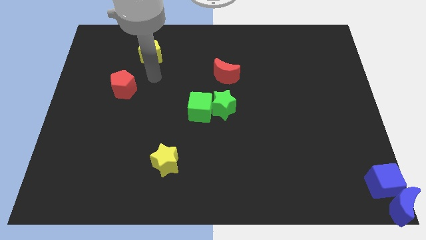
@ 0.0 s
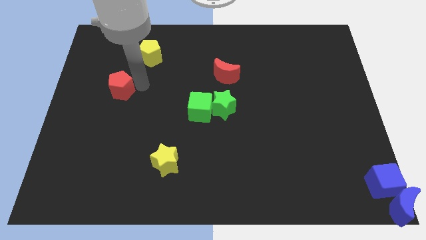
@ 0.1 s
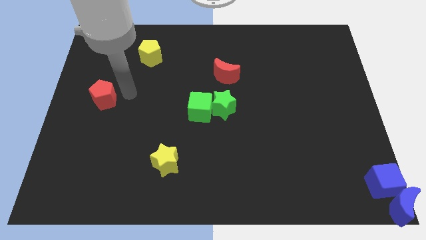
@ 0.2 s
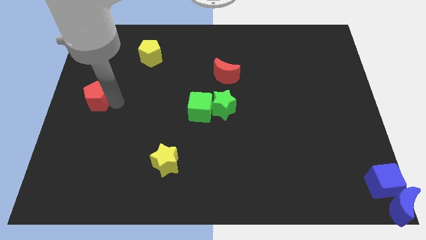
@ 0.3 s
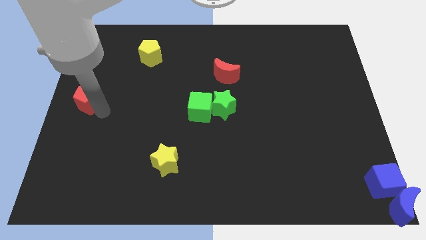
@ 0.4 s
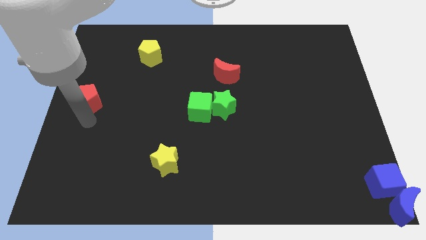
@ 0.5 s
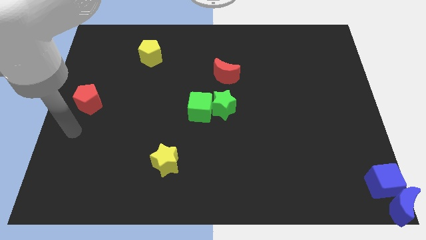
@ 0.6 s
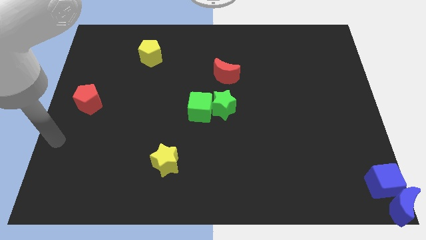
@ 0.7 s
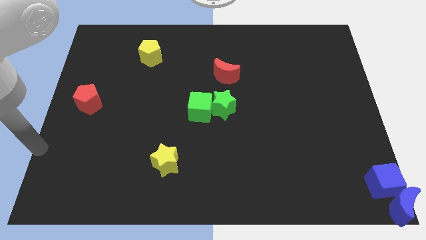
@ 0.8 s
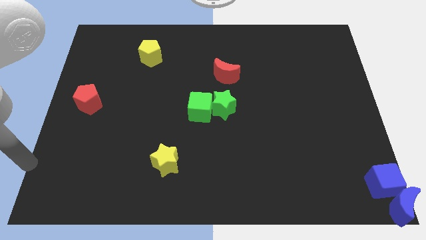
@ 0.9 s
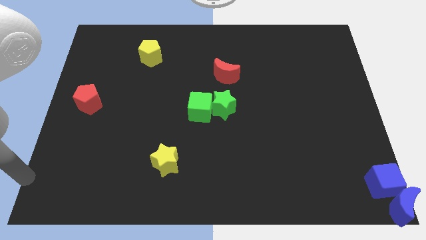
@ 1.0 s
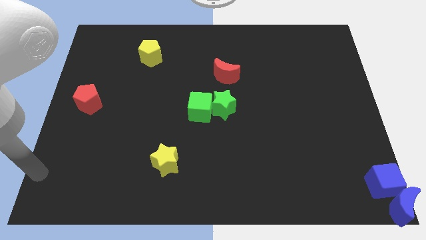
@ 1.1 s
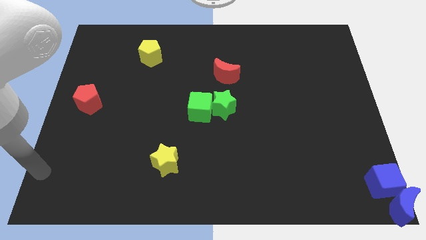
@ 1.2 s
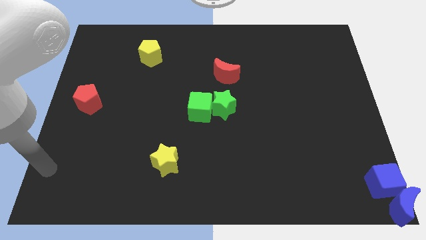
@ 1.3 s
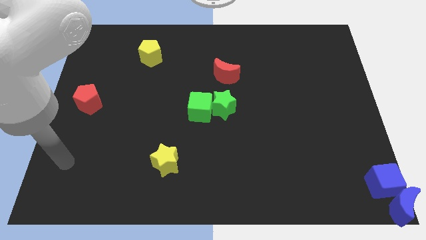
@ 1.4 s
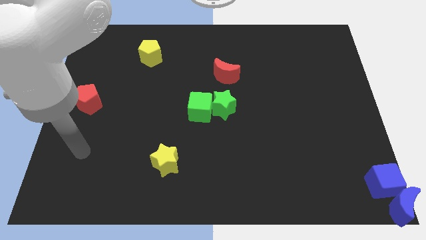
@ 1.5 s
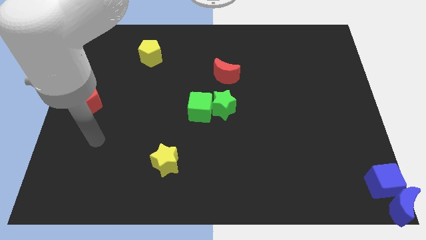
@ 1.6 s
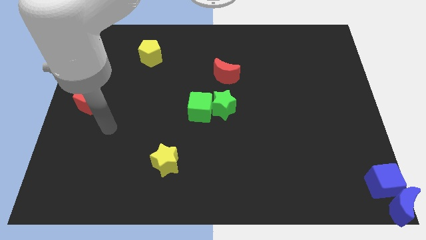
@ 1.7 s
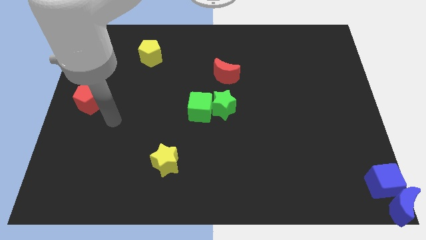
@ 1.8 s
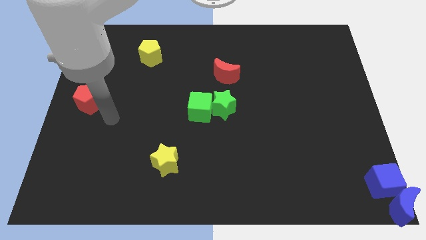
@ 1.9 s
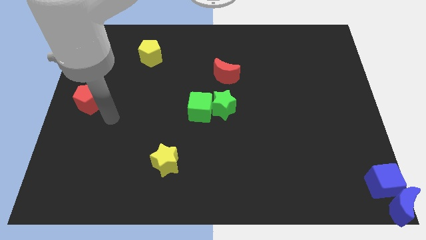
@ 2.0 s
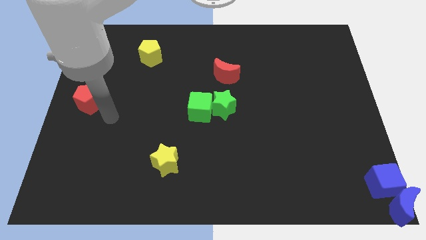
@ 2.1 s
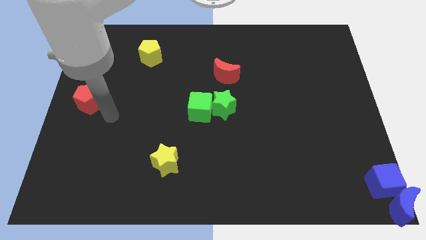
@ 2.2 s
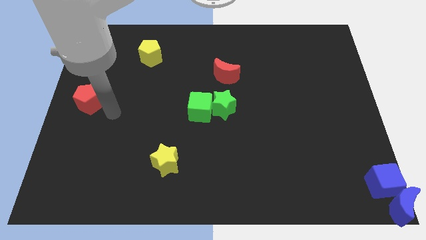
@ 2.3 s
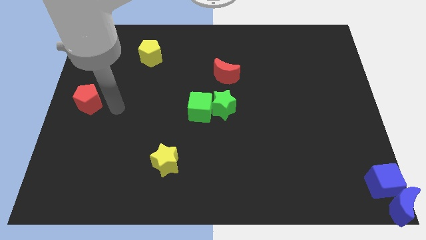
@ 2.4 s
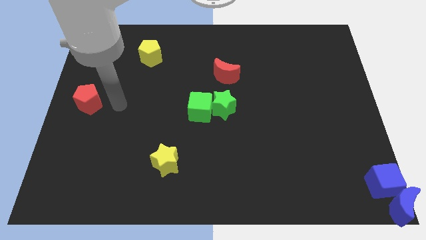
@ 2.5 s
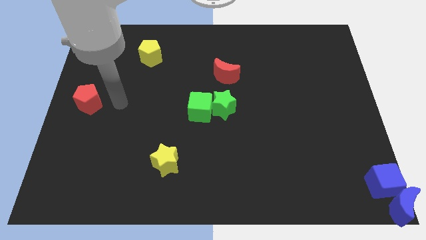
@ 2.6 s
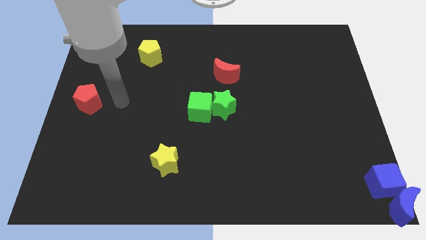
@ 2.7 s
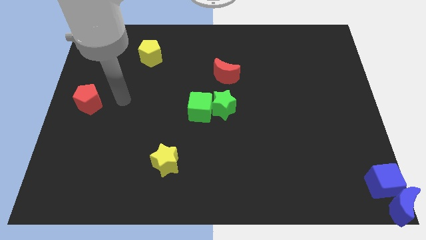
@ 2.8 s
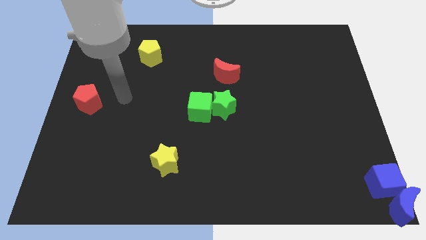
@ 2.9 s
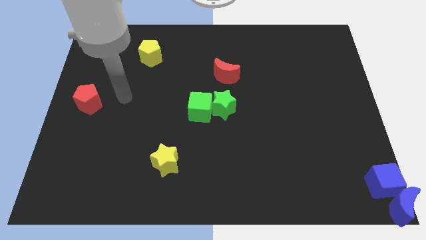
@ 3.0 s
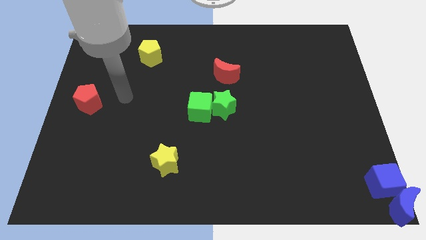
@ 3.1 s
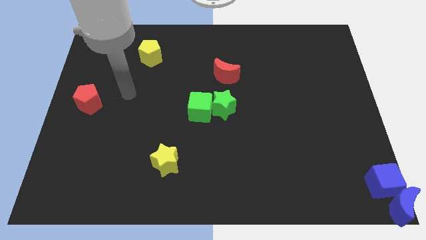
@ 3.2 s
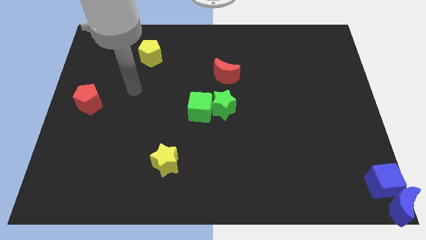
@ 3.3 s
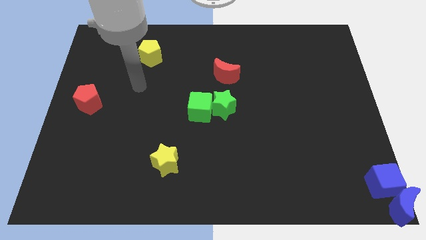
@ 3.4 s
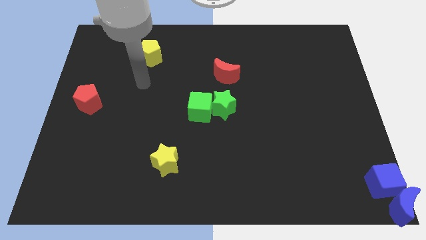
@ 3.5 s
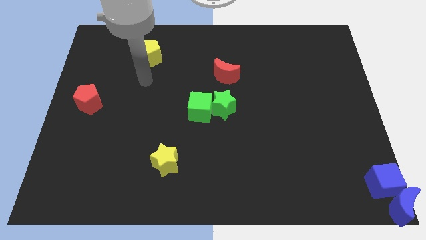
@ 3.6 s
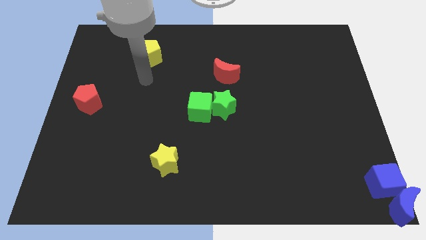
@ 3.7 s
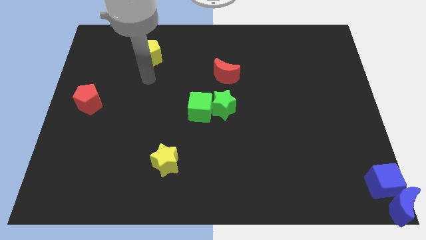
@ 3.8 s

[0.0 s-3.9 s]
push the red pentagon slightly to the left side of the board

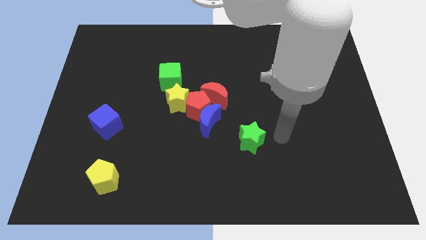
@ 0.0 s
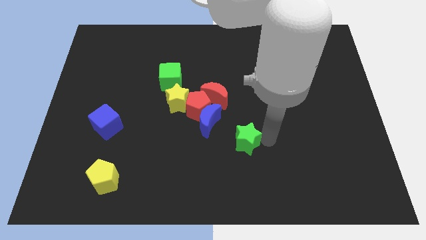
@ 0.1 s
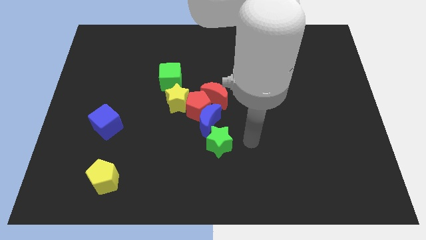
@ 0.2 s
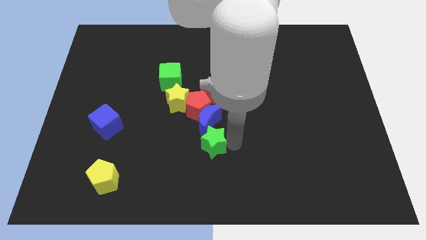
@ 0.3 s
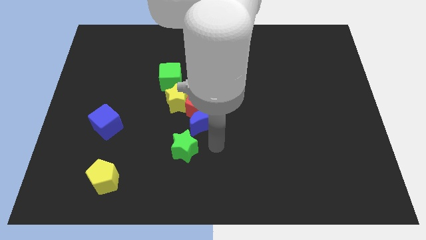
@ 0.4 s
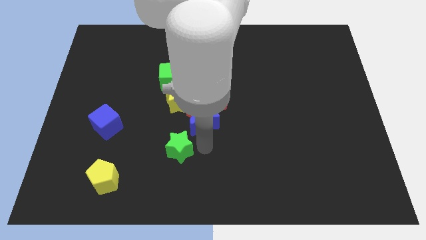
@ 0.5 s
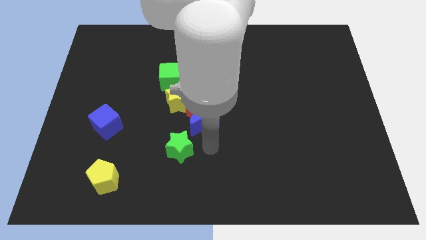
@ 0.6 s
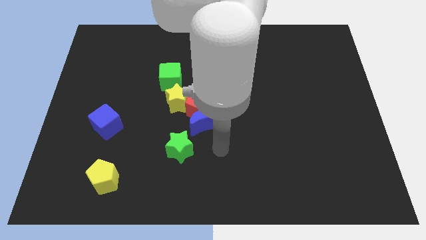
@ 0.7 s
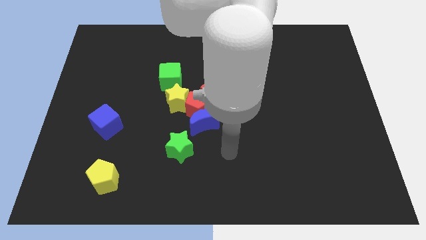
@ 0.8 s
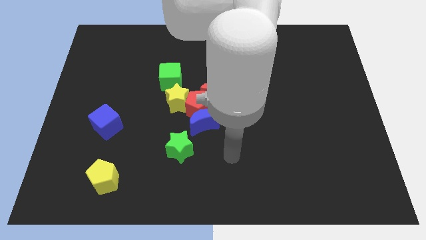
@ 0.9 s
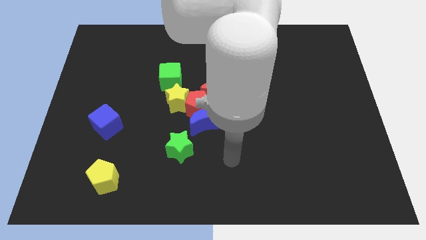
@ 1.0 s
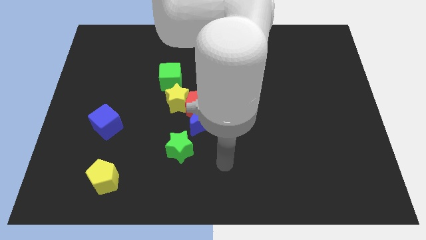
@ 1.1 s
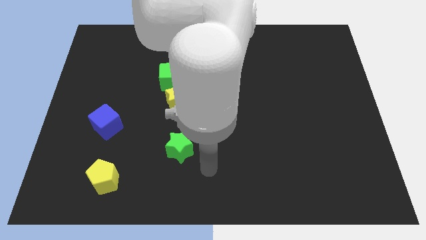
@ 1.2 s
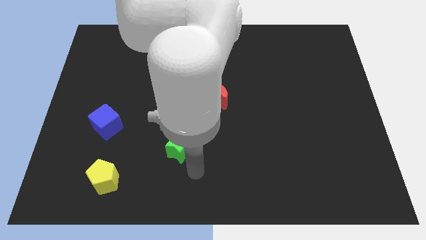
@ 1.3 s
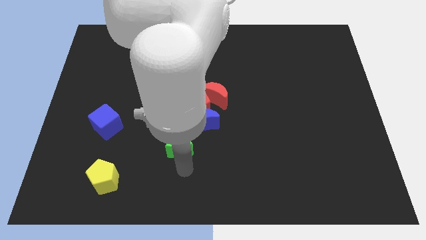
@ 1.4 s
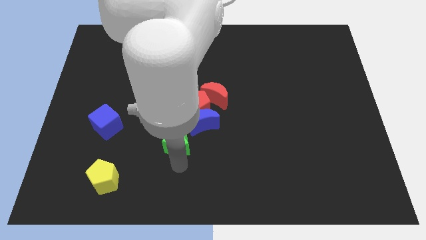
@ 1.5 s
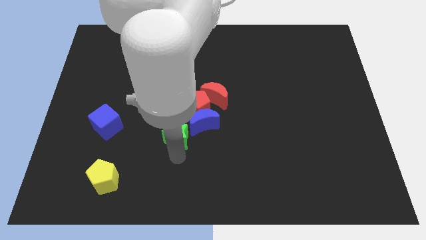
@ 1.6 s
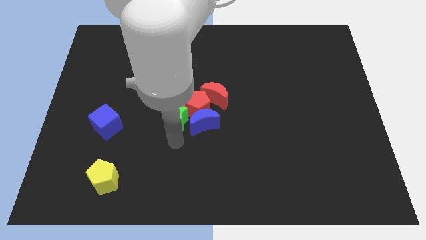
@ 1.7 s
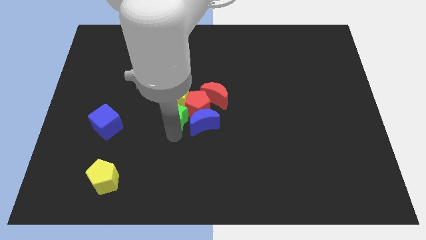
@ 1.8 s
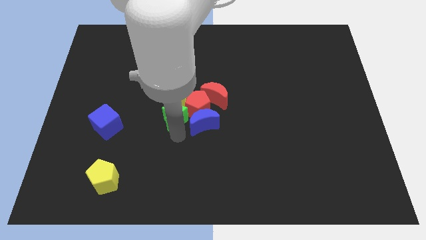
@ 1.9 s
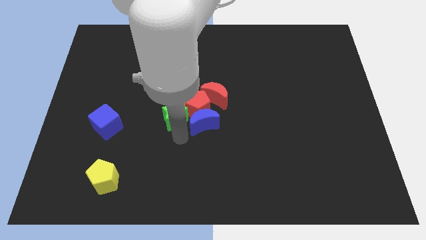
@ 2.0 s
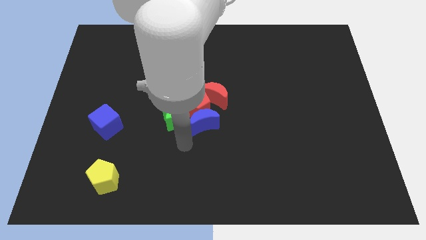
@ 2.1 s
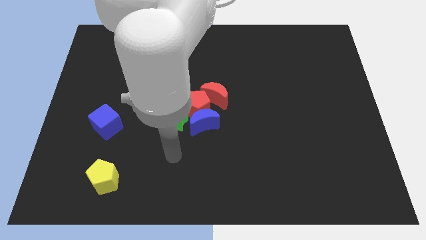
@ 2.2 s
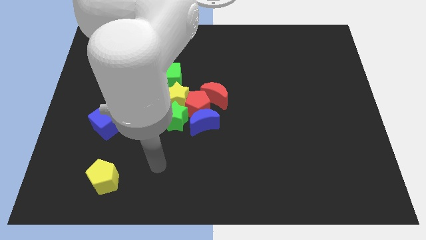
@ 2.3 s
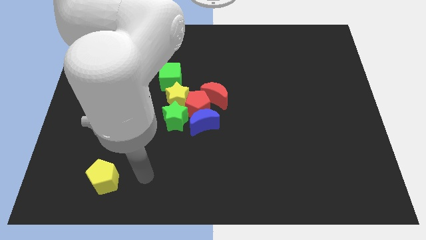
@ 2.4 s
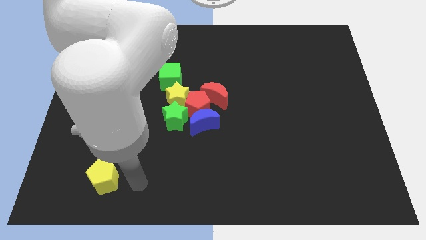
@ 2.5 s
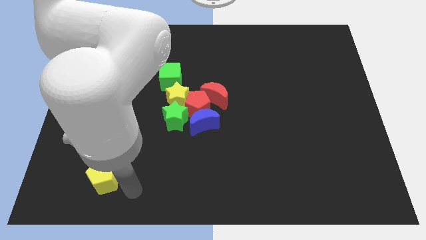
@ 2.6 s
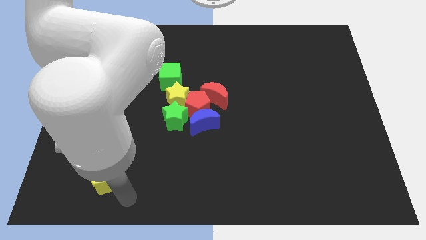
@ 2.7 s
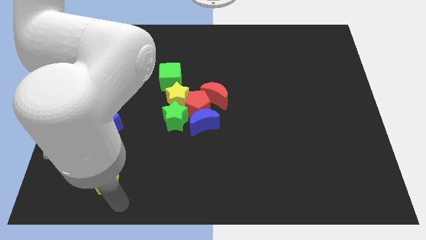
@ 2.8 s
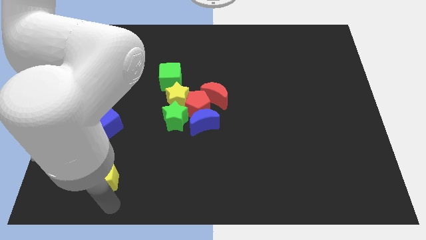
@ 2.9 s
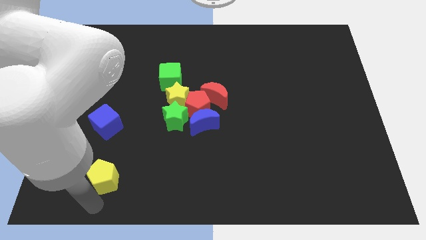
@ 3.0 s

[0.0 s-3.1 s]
push the green star parallel left to the blue moon

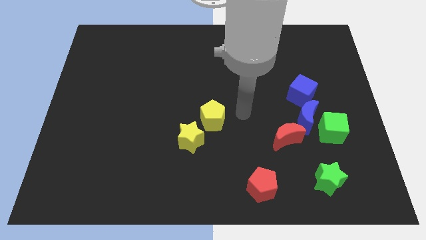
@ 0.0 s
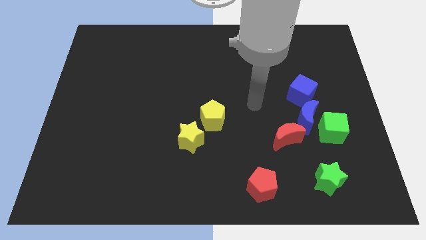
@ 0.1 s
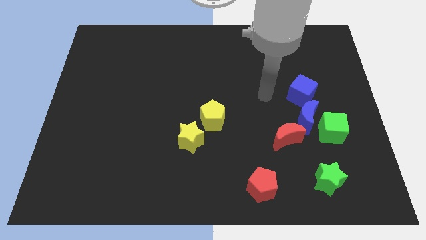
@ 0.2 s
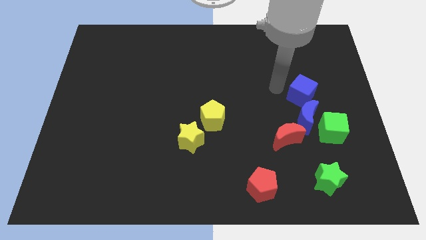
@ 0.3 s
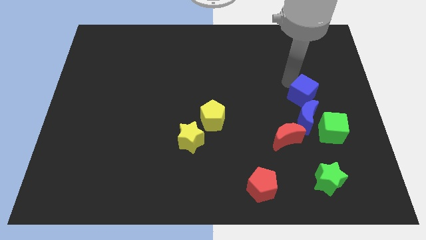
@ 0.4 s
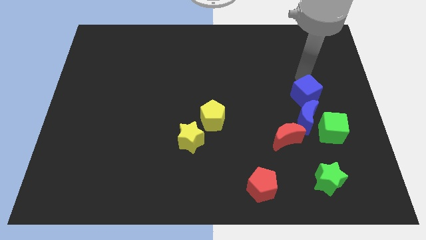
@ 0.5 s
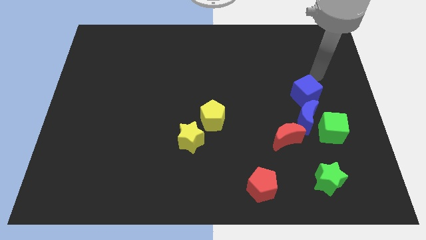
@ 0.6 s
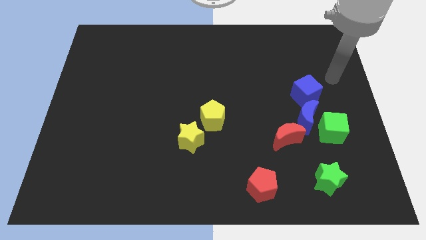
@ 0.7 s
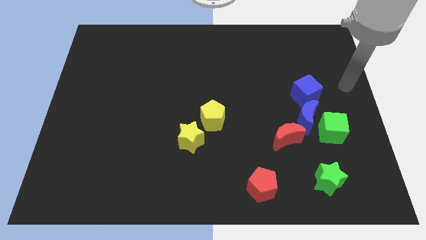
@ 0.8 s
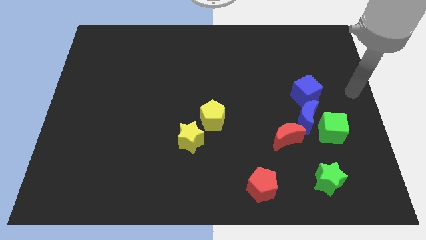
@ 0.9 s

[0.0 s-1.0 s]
move the blue cube slightly to the right of the board

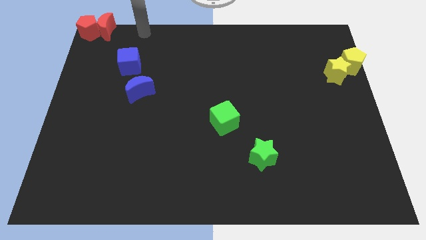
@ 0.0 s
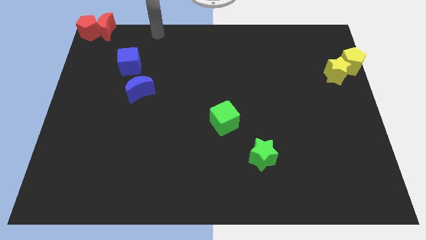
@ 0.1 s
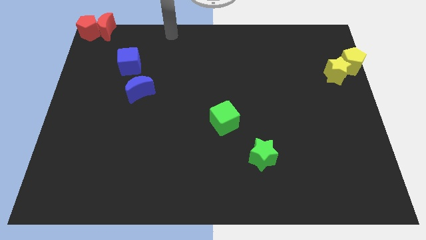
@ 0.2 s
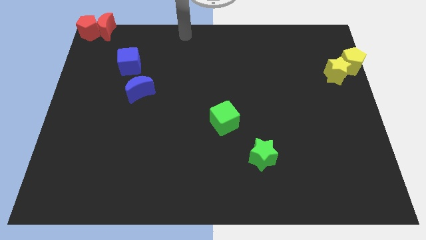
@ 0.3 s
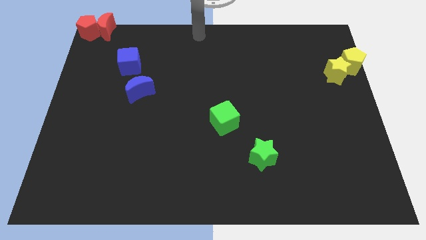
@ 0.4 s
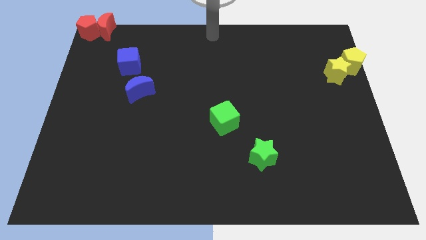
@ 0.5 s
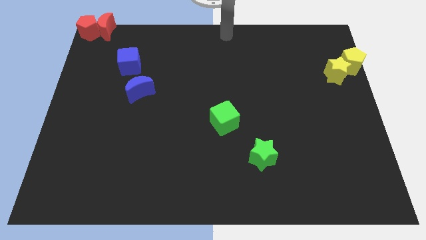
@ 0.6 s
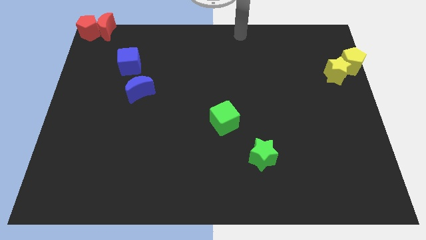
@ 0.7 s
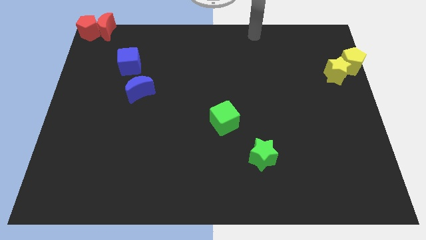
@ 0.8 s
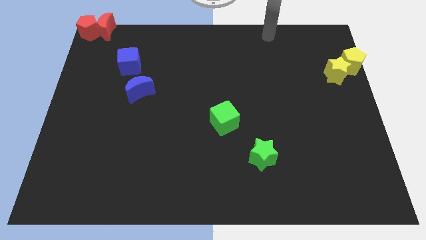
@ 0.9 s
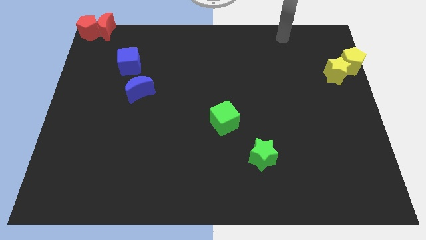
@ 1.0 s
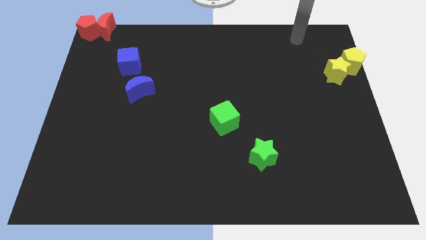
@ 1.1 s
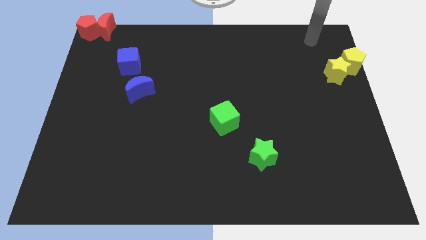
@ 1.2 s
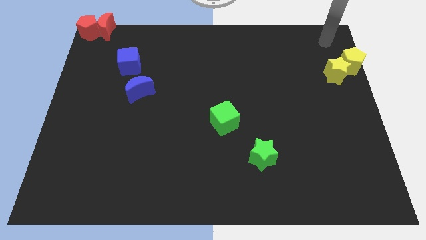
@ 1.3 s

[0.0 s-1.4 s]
place your hand above the yellow pair of blocks
